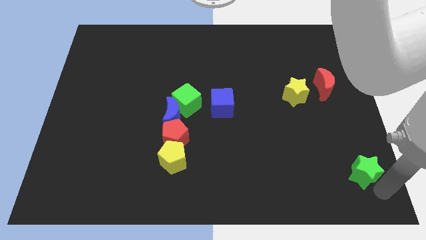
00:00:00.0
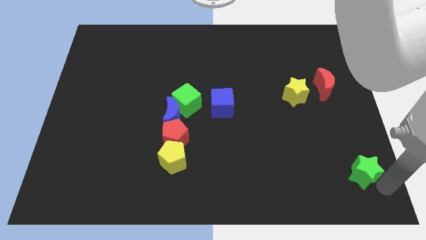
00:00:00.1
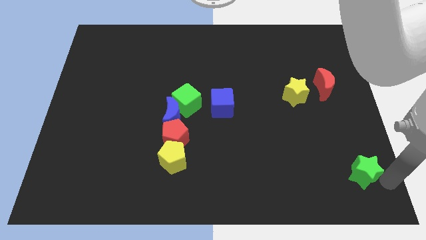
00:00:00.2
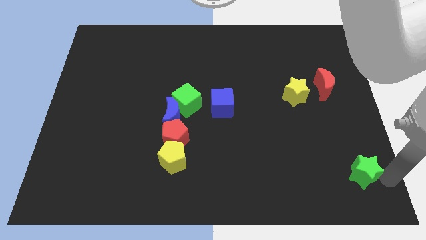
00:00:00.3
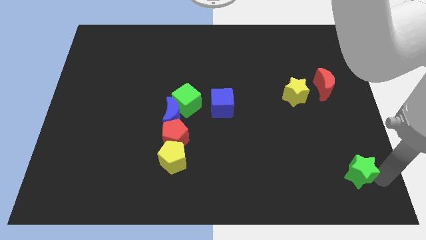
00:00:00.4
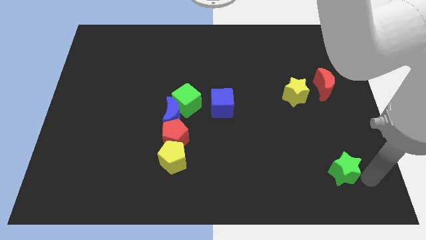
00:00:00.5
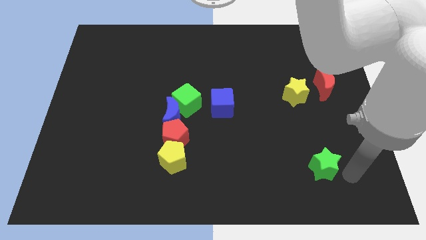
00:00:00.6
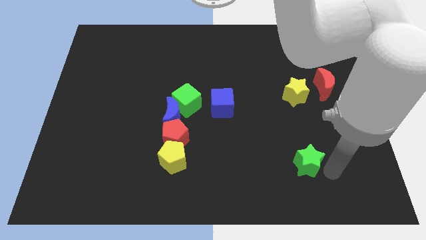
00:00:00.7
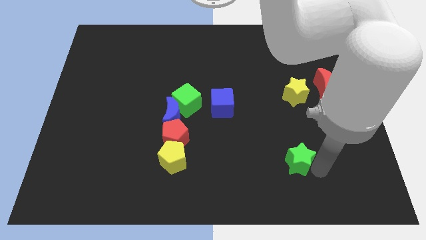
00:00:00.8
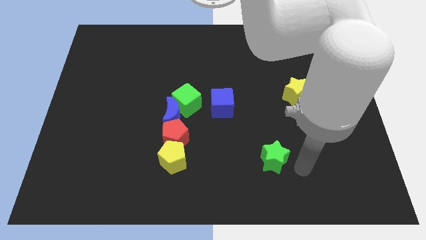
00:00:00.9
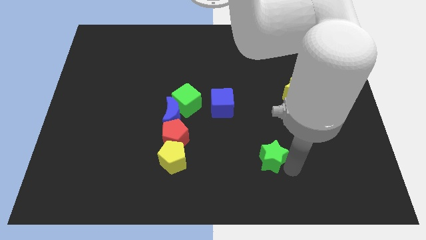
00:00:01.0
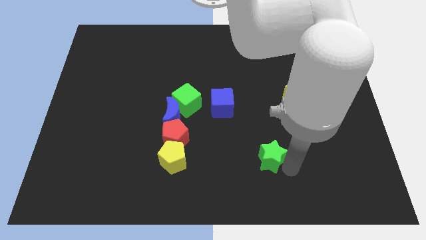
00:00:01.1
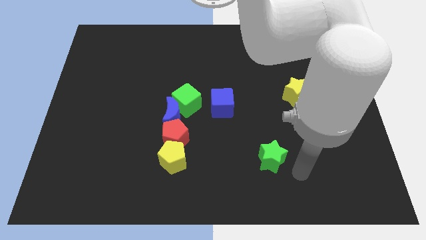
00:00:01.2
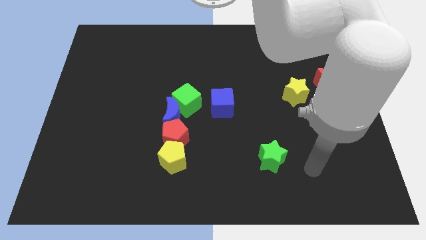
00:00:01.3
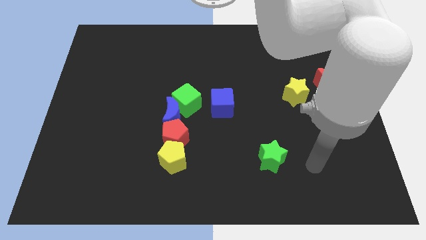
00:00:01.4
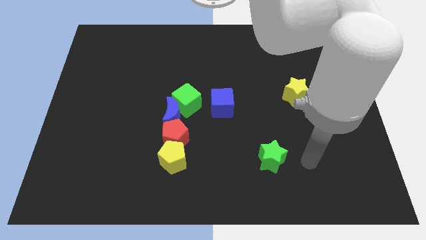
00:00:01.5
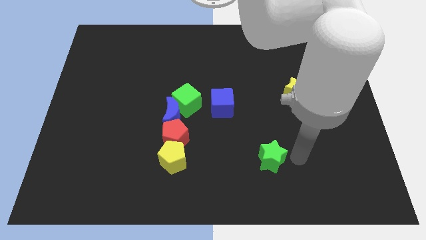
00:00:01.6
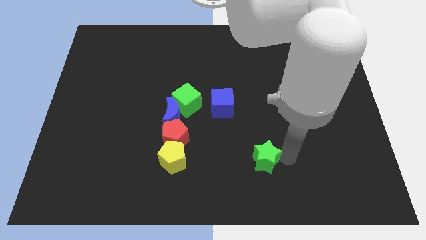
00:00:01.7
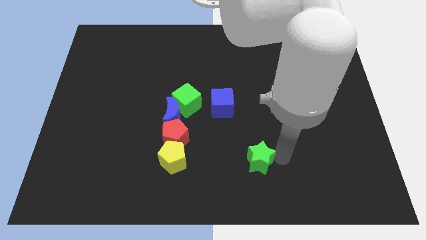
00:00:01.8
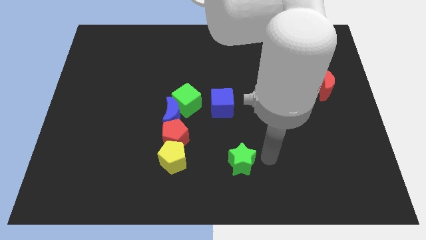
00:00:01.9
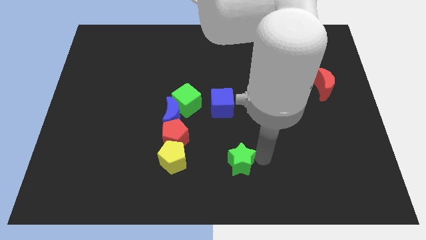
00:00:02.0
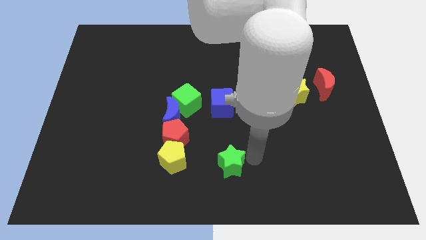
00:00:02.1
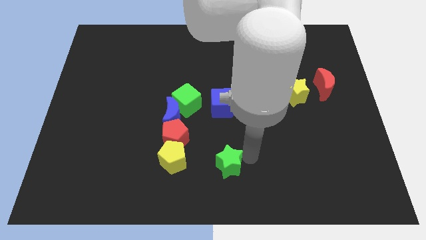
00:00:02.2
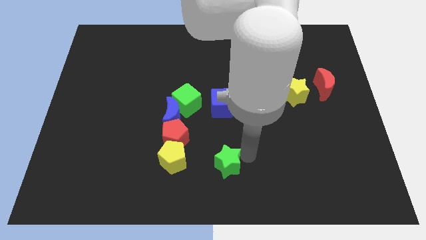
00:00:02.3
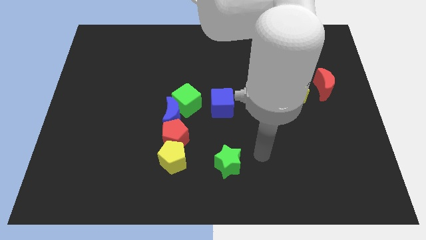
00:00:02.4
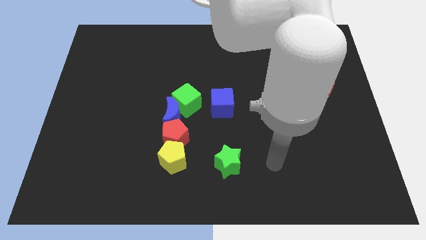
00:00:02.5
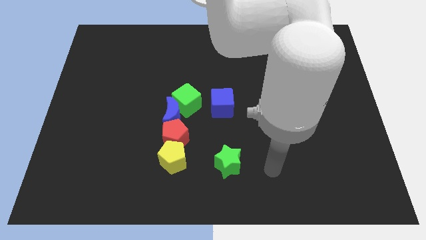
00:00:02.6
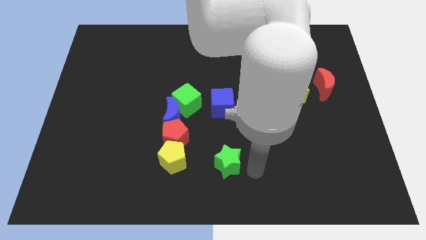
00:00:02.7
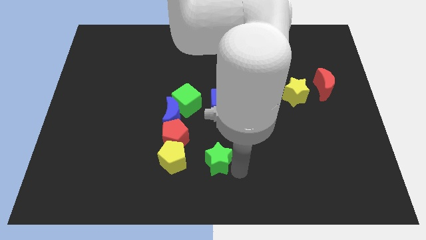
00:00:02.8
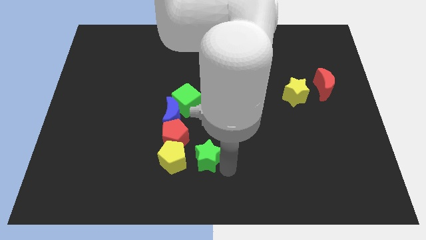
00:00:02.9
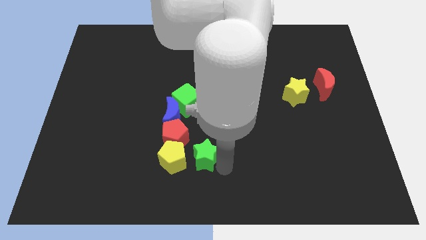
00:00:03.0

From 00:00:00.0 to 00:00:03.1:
push green star to the right of yellow pentagon

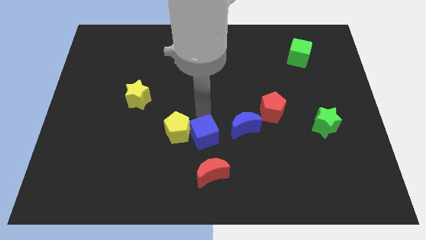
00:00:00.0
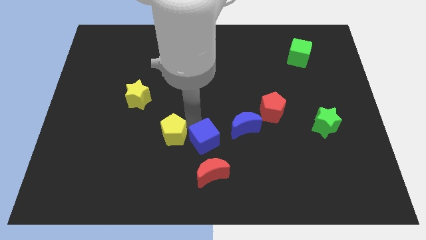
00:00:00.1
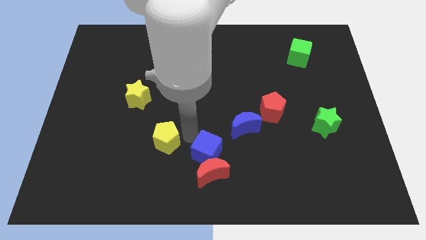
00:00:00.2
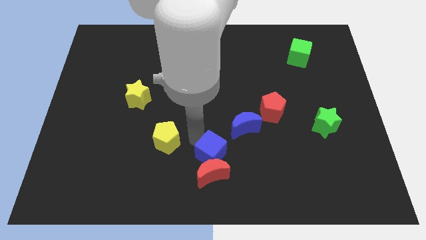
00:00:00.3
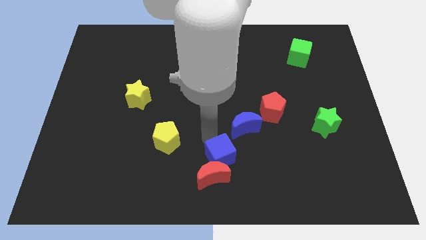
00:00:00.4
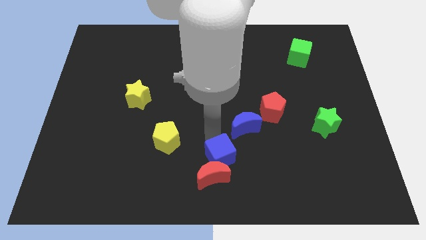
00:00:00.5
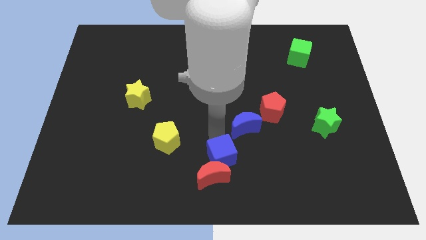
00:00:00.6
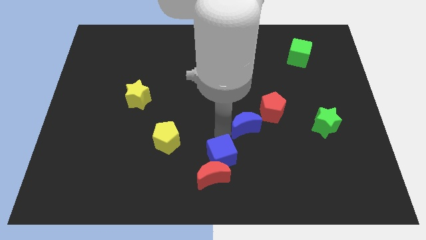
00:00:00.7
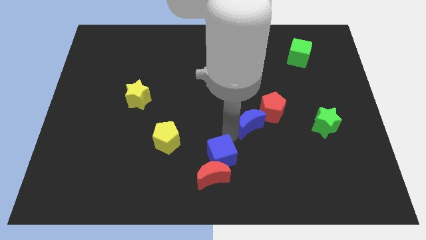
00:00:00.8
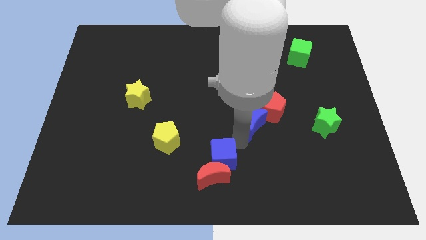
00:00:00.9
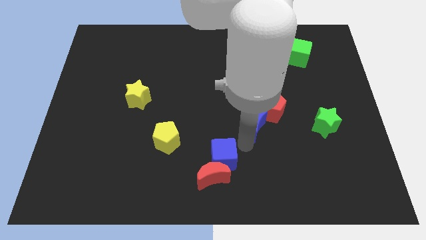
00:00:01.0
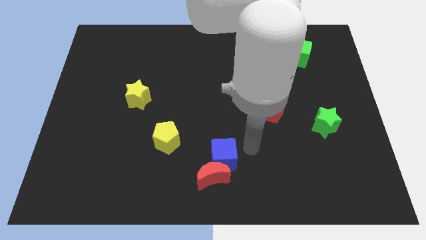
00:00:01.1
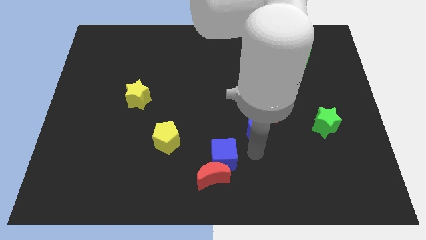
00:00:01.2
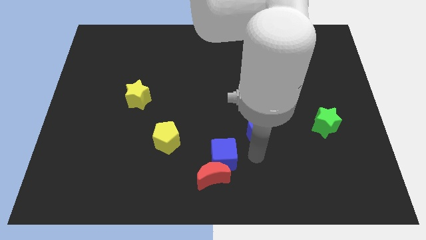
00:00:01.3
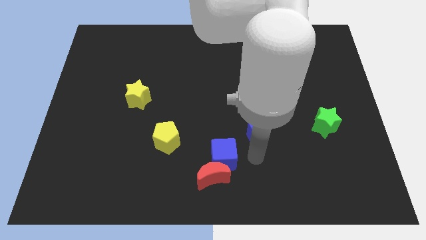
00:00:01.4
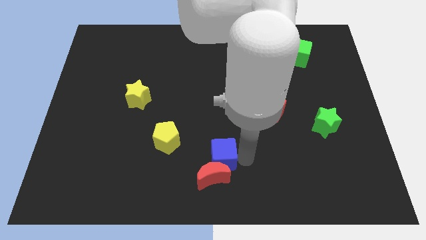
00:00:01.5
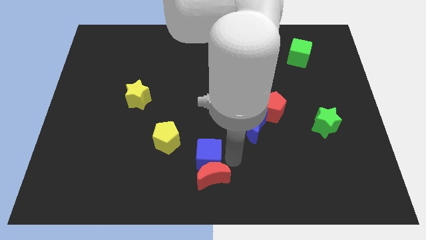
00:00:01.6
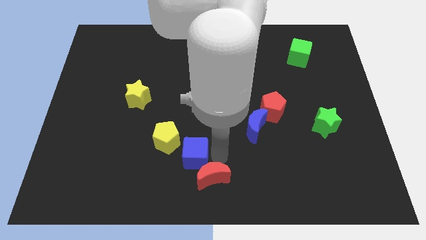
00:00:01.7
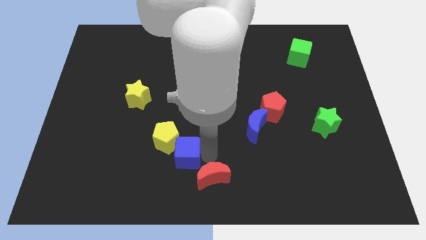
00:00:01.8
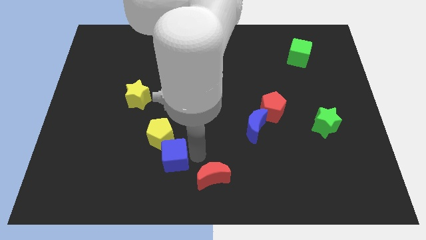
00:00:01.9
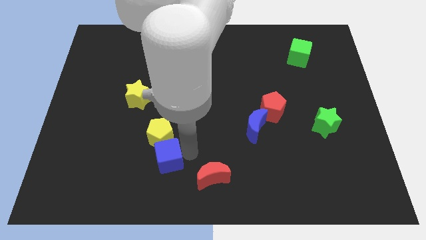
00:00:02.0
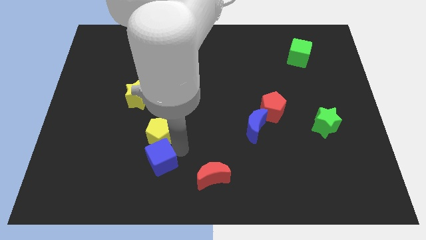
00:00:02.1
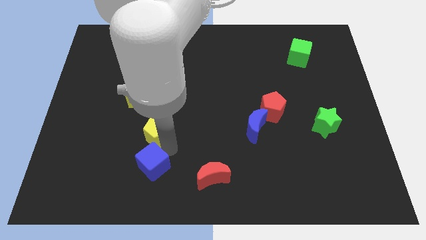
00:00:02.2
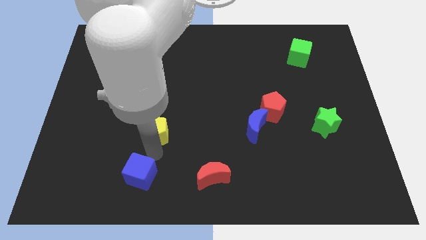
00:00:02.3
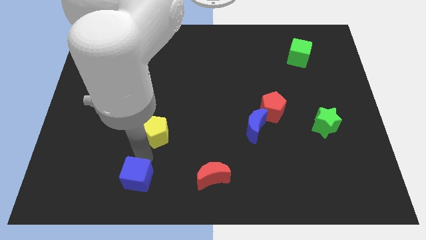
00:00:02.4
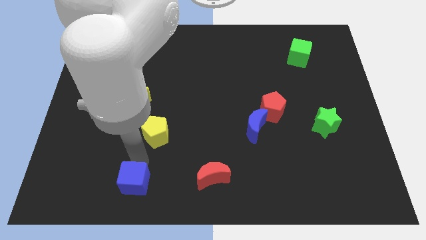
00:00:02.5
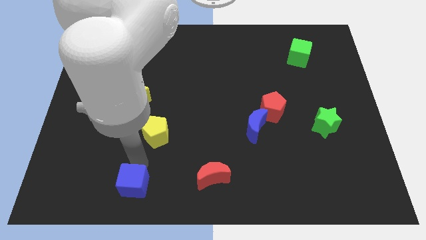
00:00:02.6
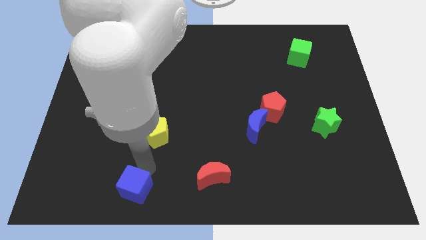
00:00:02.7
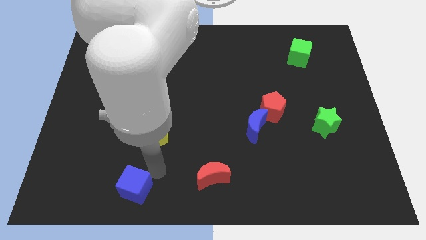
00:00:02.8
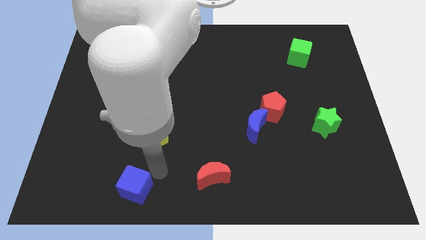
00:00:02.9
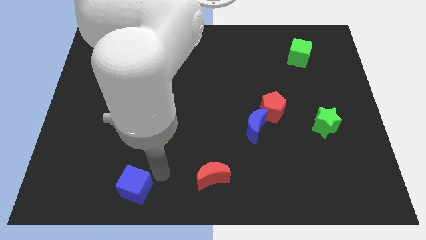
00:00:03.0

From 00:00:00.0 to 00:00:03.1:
push the blue cube left side of red crescent

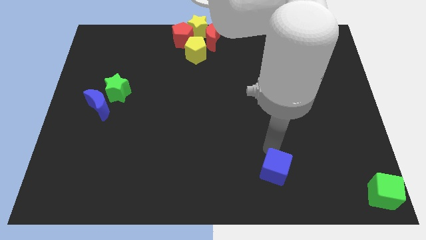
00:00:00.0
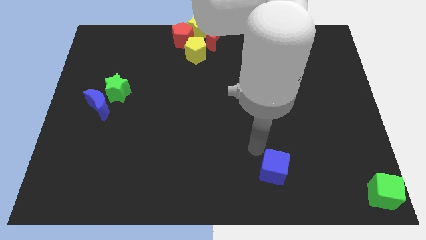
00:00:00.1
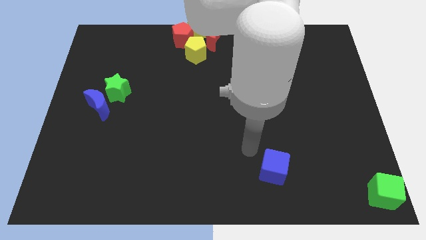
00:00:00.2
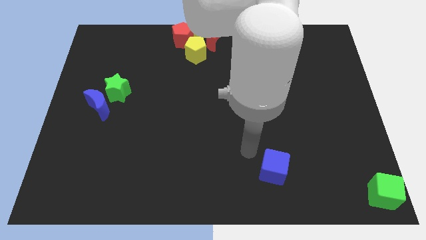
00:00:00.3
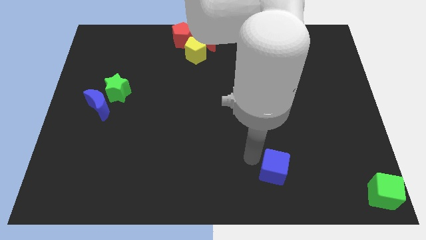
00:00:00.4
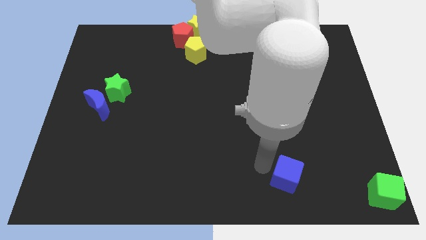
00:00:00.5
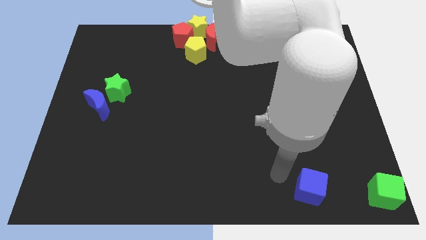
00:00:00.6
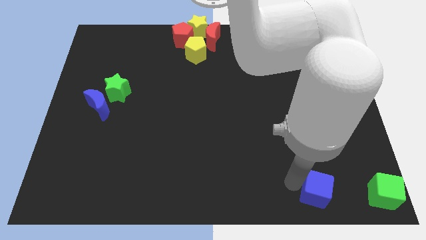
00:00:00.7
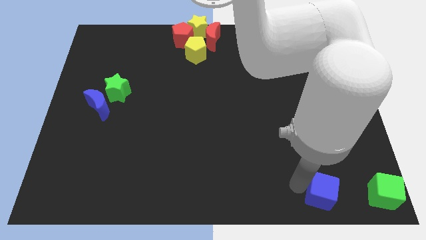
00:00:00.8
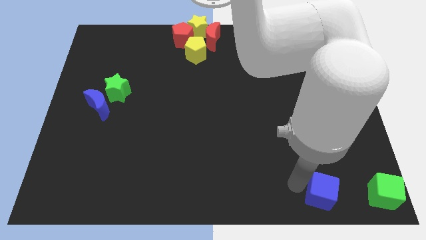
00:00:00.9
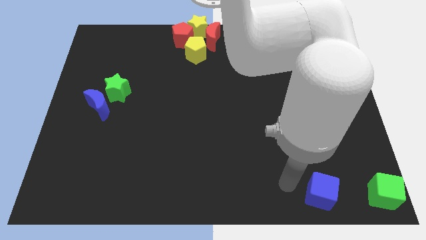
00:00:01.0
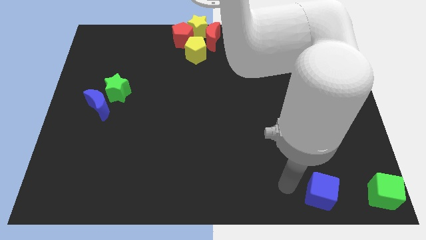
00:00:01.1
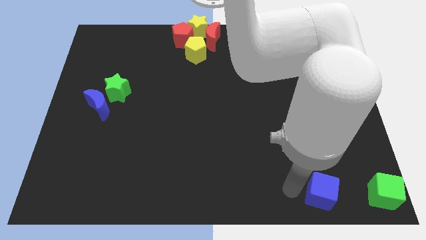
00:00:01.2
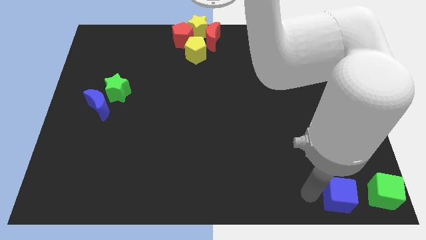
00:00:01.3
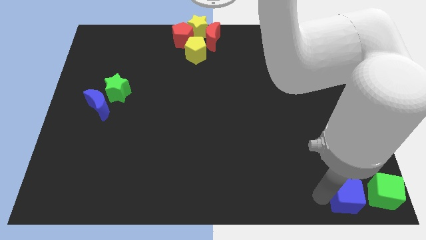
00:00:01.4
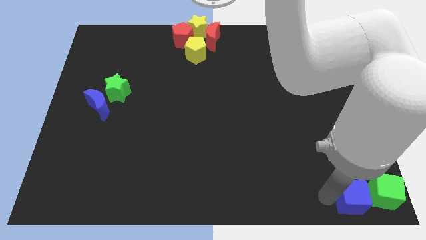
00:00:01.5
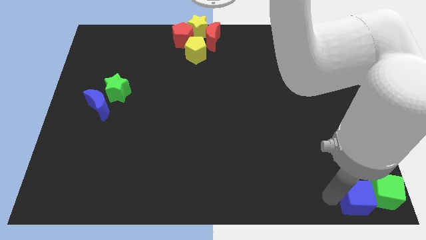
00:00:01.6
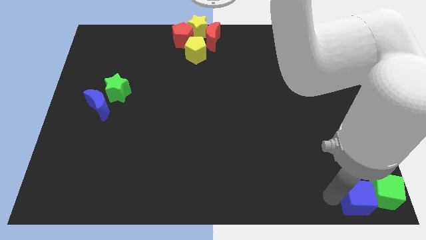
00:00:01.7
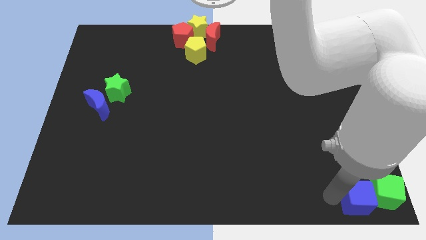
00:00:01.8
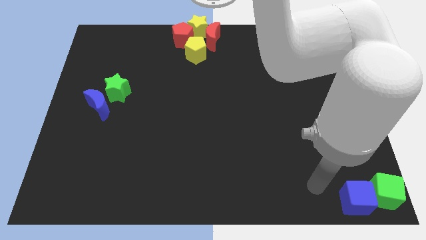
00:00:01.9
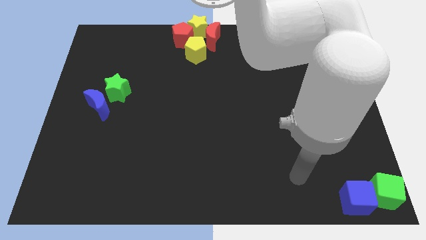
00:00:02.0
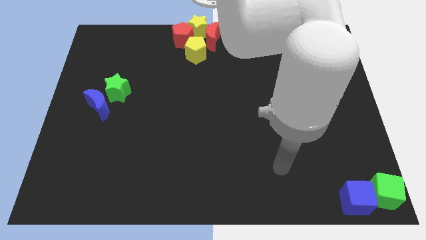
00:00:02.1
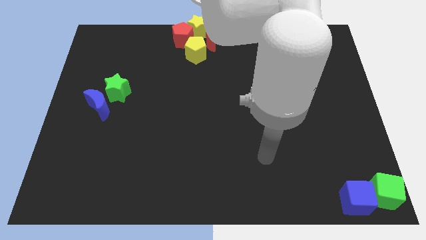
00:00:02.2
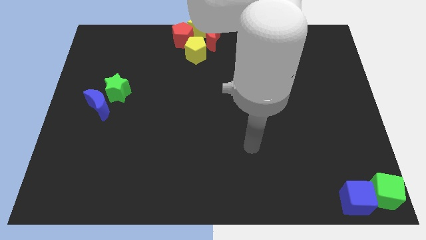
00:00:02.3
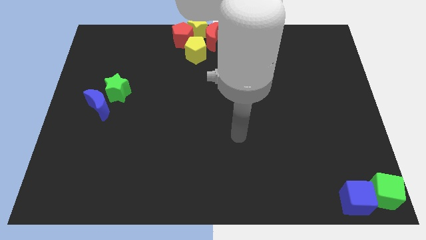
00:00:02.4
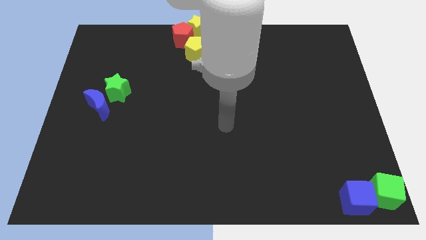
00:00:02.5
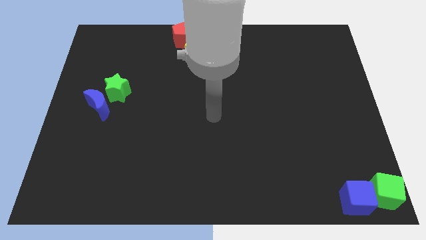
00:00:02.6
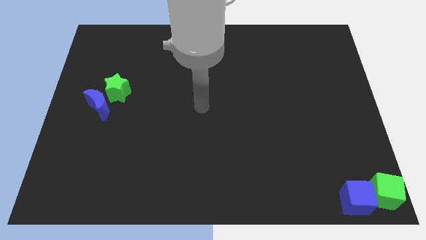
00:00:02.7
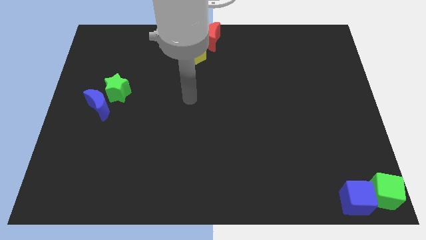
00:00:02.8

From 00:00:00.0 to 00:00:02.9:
move the blue cube into the green cube

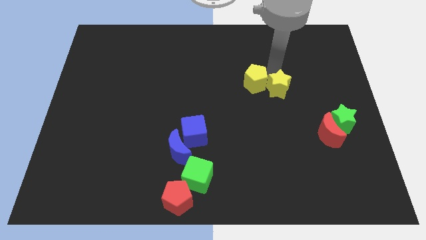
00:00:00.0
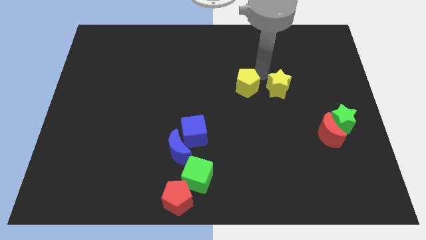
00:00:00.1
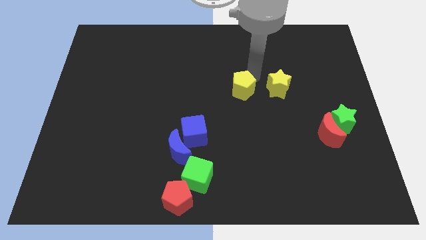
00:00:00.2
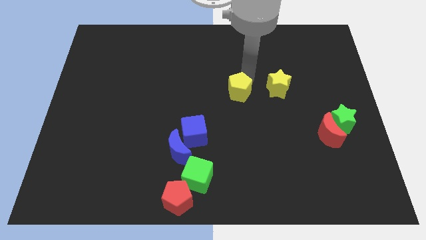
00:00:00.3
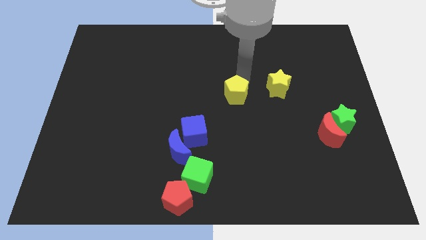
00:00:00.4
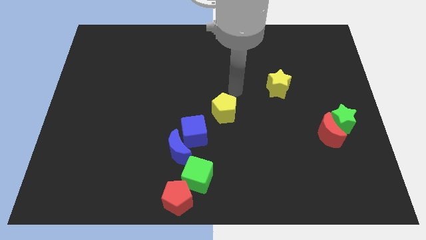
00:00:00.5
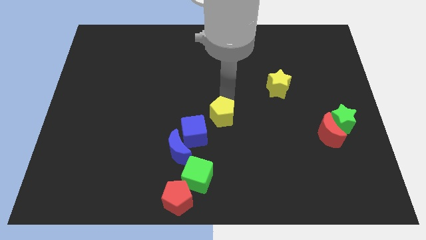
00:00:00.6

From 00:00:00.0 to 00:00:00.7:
separate the yellow pentagon from yellow star
